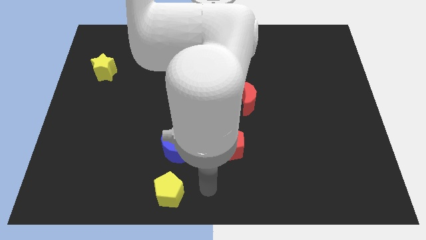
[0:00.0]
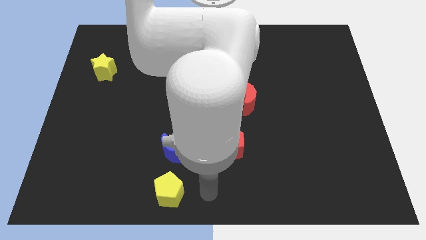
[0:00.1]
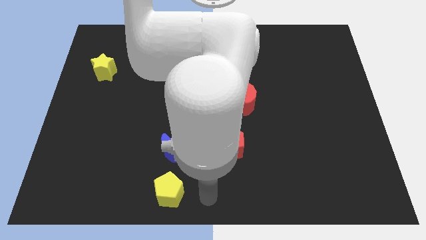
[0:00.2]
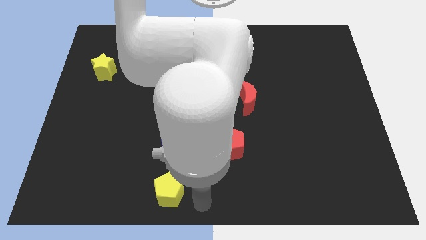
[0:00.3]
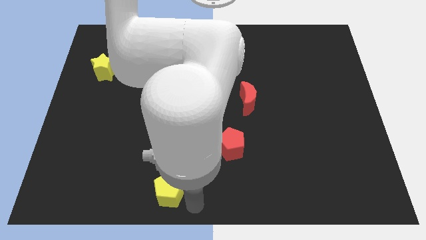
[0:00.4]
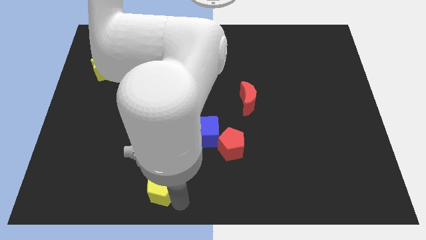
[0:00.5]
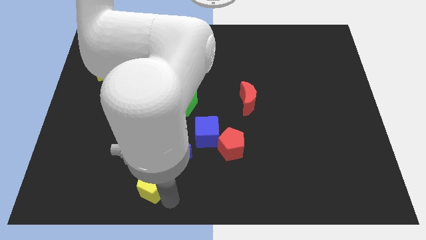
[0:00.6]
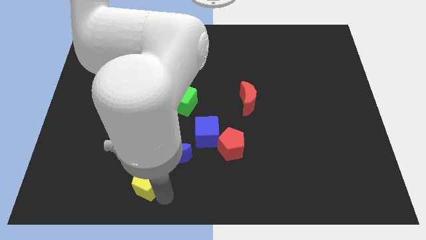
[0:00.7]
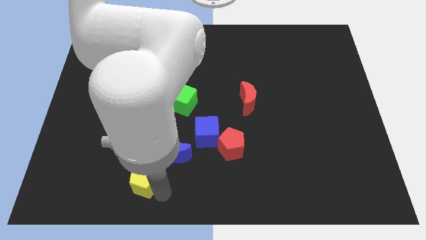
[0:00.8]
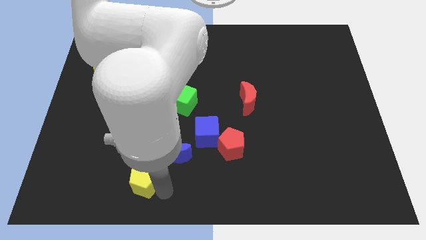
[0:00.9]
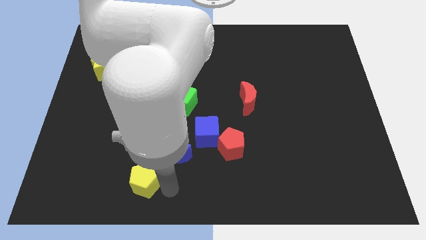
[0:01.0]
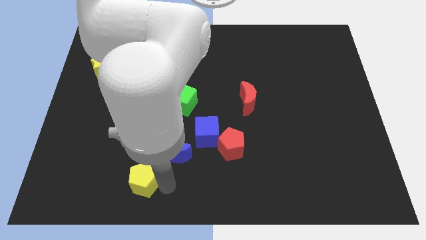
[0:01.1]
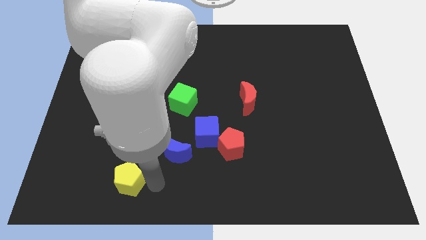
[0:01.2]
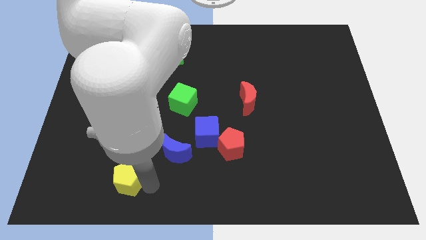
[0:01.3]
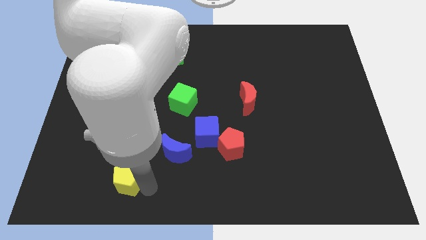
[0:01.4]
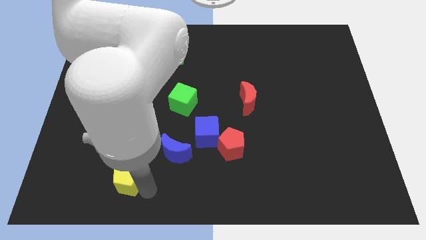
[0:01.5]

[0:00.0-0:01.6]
move the yellow pentagon diagonally to the bottom left of the blue moon

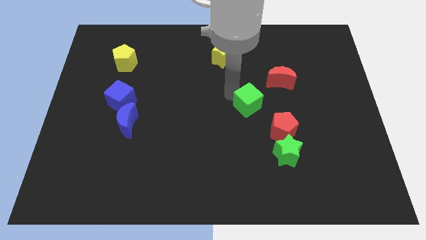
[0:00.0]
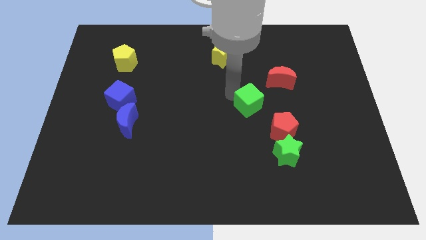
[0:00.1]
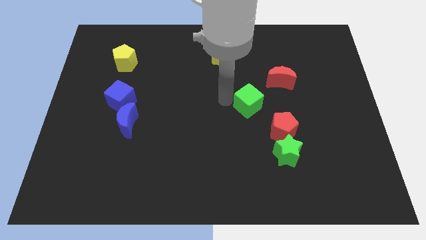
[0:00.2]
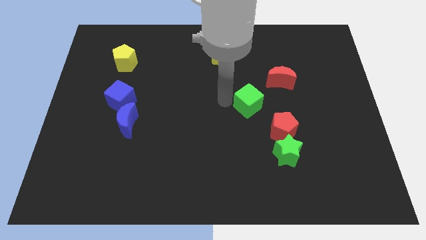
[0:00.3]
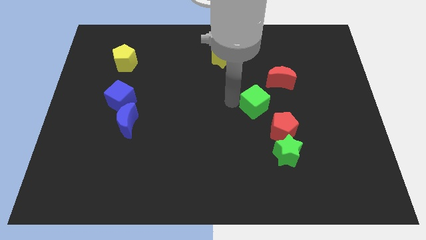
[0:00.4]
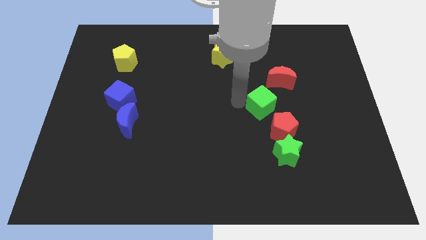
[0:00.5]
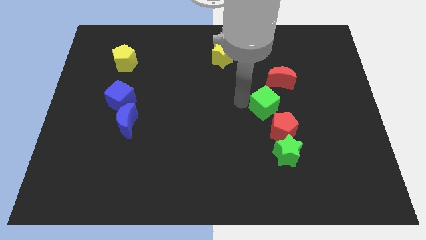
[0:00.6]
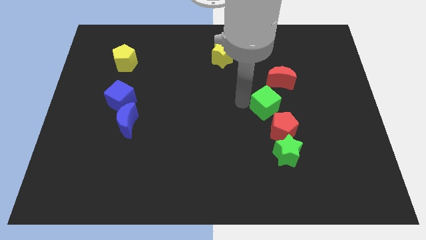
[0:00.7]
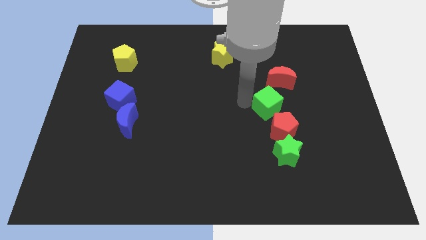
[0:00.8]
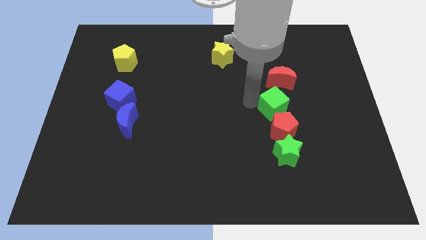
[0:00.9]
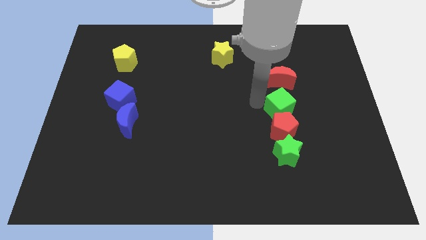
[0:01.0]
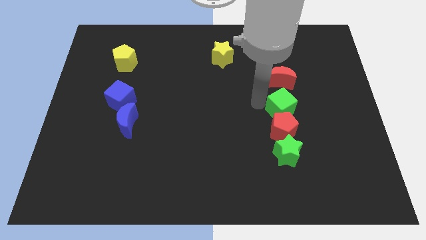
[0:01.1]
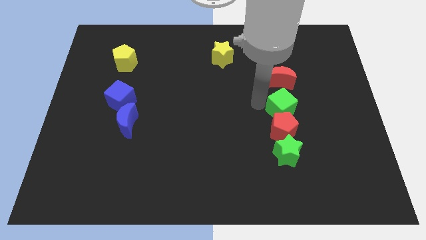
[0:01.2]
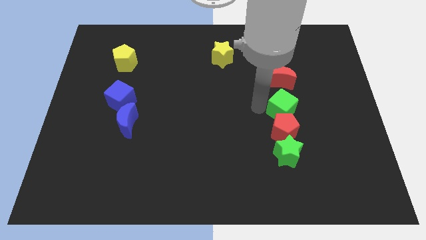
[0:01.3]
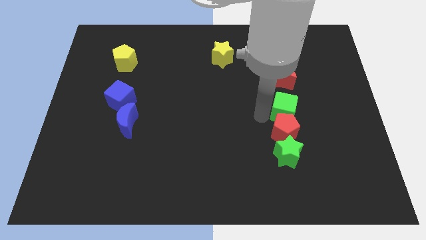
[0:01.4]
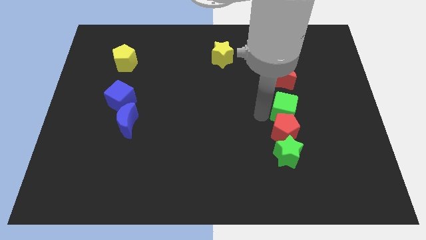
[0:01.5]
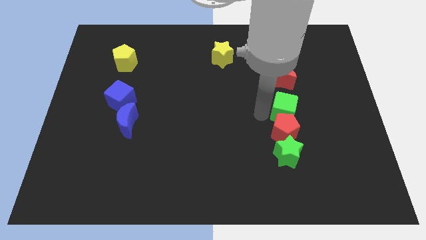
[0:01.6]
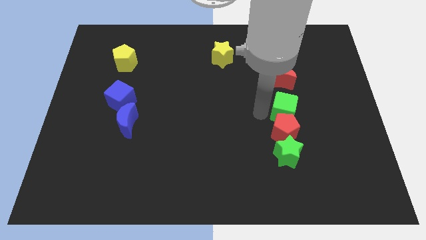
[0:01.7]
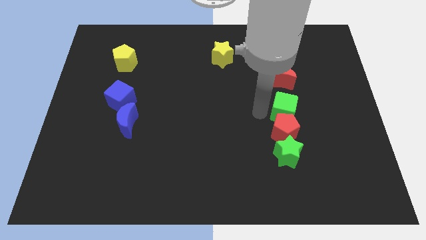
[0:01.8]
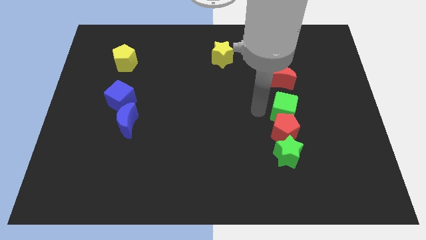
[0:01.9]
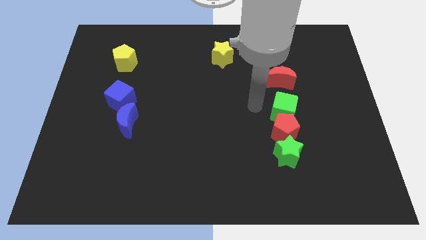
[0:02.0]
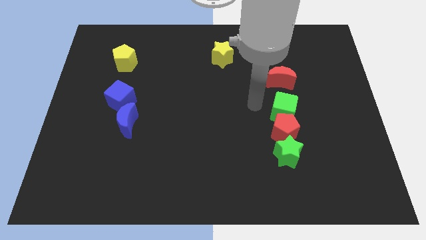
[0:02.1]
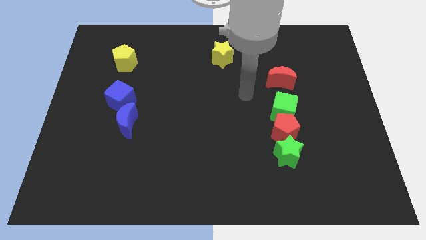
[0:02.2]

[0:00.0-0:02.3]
move the green cube to the top of the red pentagon

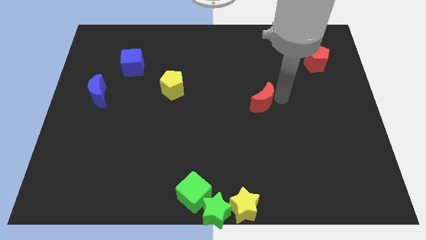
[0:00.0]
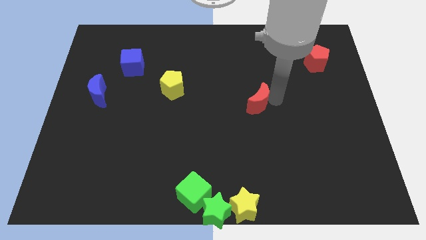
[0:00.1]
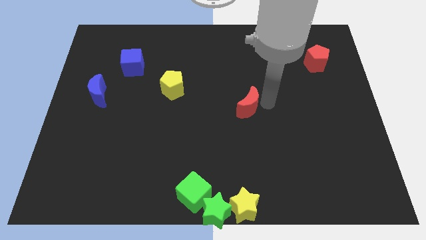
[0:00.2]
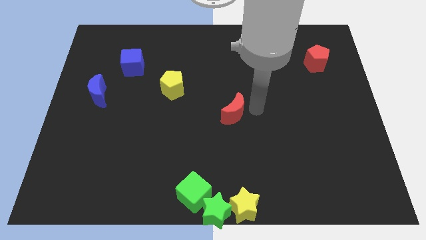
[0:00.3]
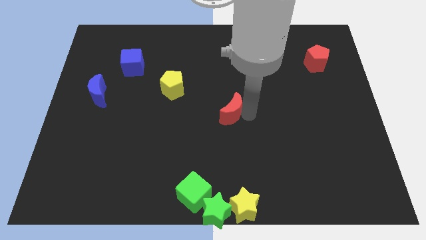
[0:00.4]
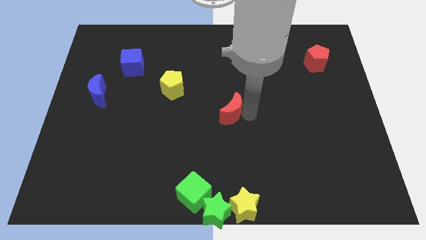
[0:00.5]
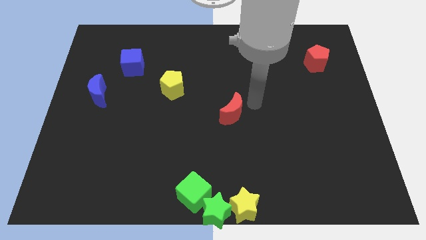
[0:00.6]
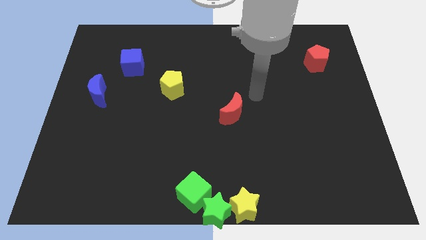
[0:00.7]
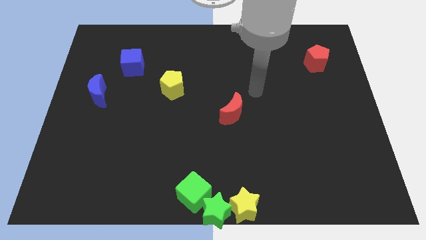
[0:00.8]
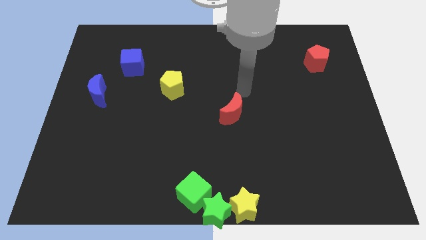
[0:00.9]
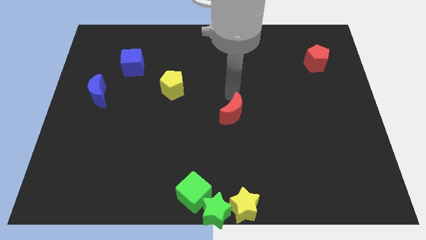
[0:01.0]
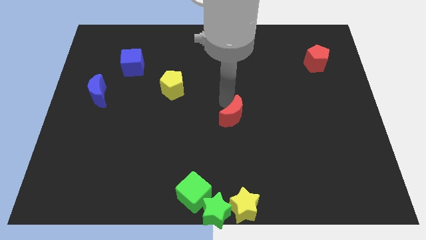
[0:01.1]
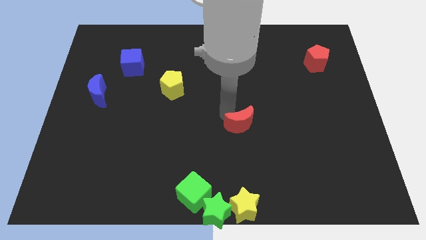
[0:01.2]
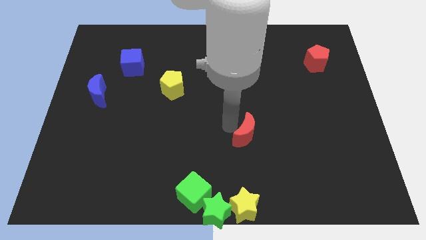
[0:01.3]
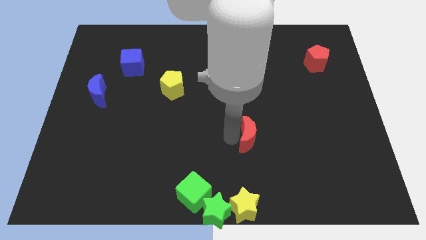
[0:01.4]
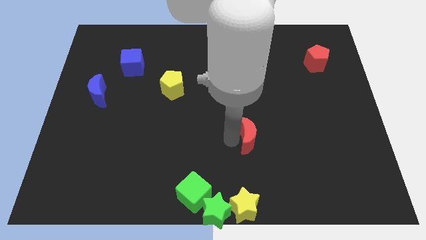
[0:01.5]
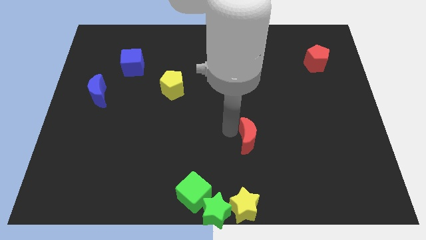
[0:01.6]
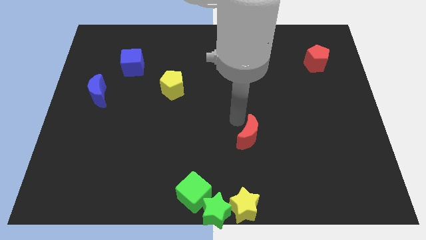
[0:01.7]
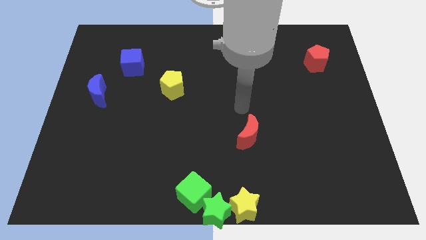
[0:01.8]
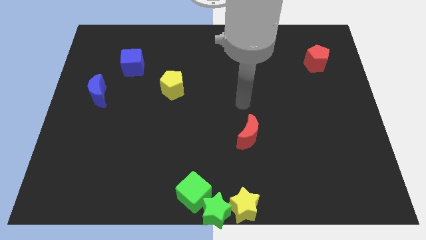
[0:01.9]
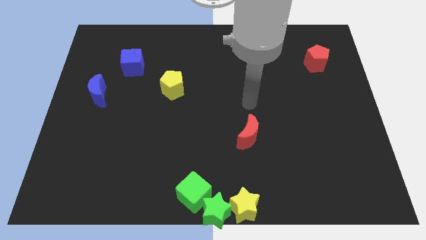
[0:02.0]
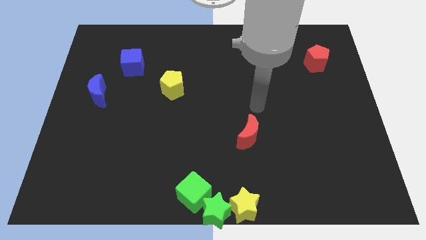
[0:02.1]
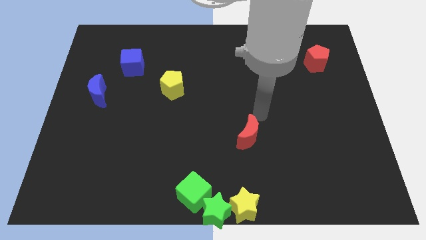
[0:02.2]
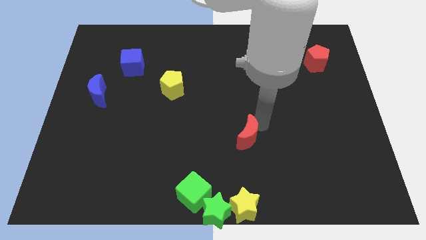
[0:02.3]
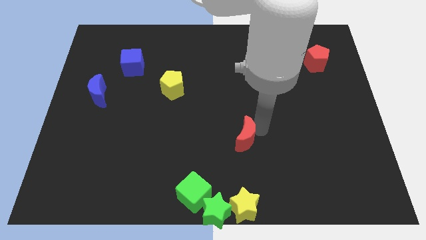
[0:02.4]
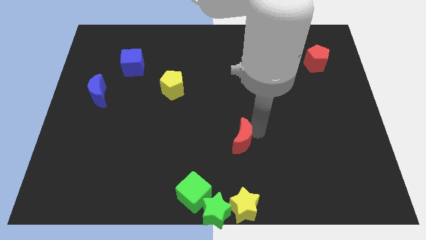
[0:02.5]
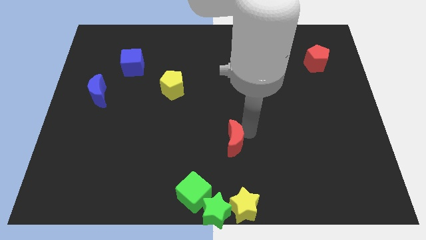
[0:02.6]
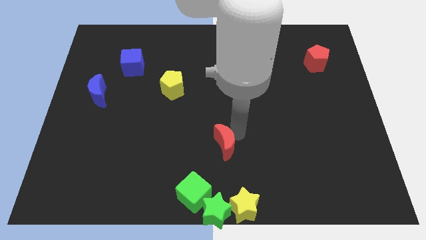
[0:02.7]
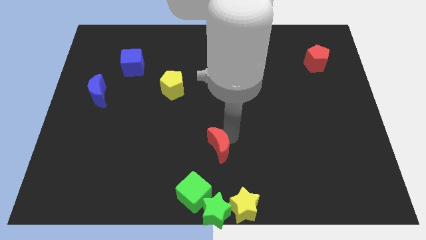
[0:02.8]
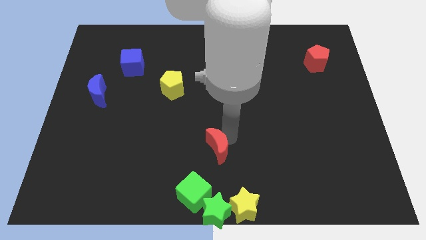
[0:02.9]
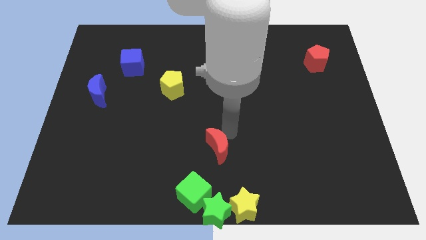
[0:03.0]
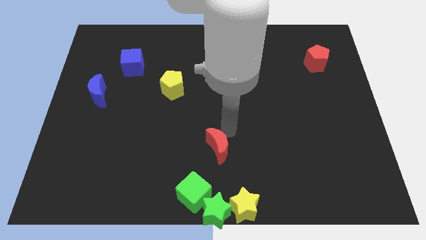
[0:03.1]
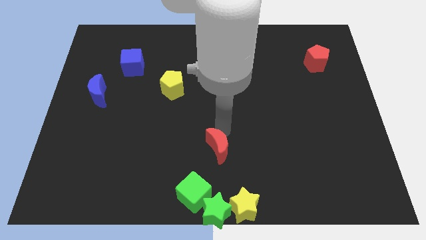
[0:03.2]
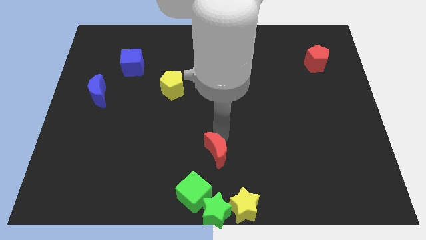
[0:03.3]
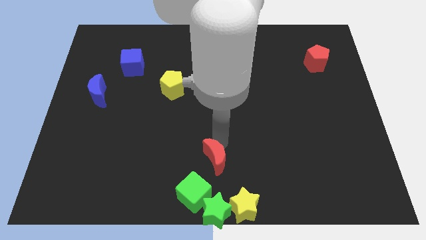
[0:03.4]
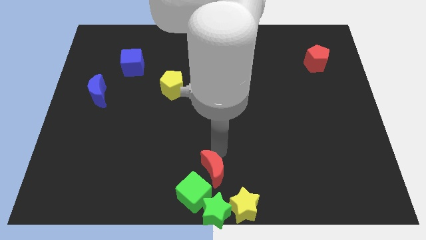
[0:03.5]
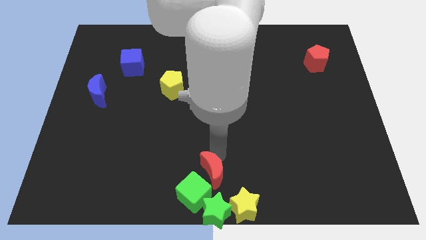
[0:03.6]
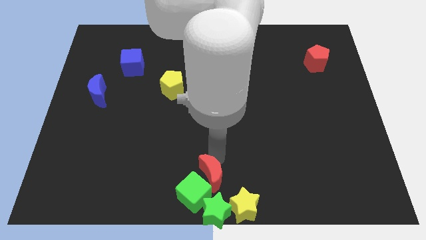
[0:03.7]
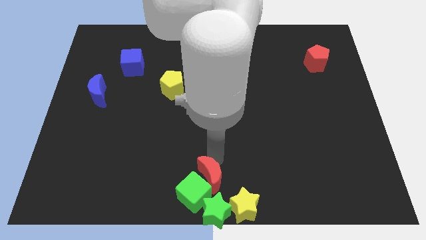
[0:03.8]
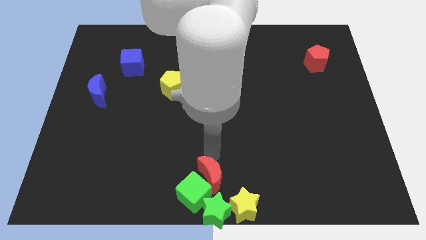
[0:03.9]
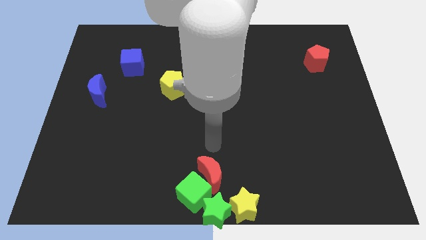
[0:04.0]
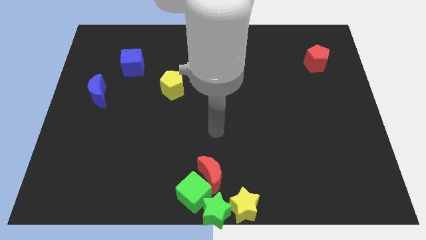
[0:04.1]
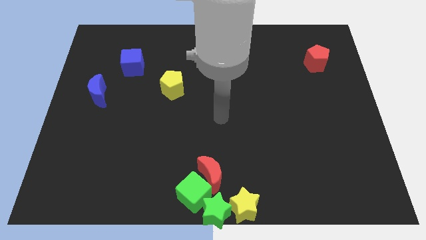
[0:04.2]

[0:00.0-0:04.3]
push the red crescent to the top right of the green cube

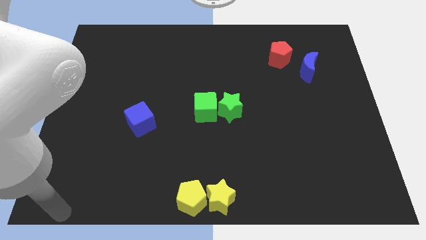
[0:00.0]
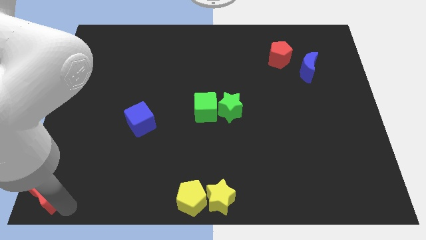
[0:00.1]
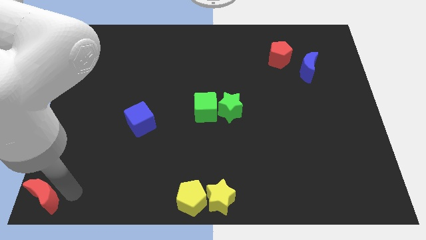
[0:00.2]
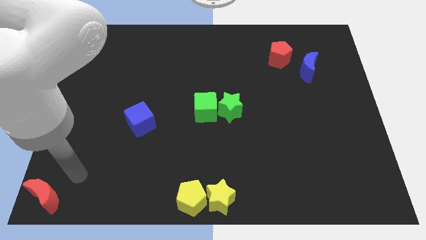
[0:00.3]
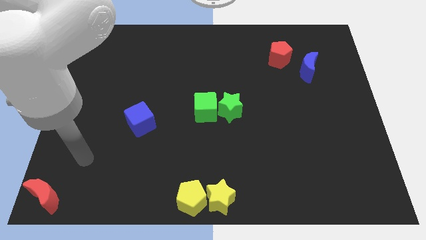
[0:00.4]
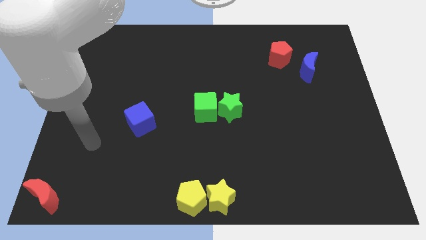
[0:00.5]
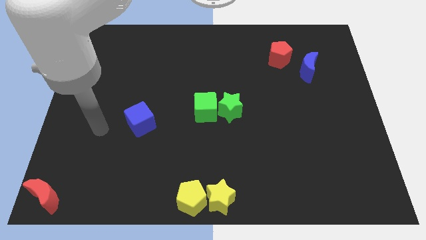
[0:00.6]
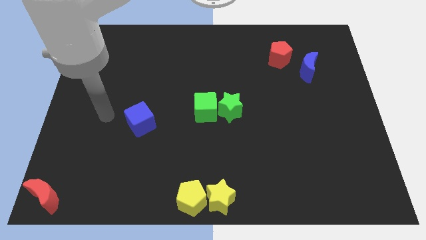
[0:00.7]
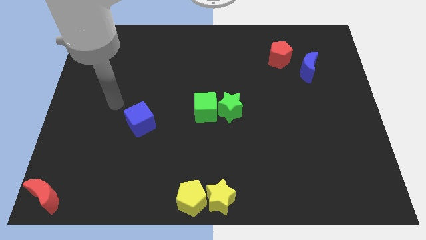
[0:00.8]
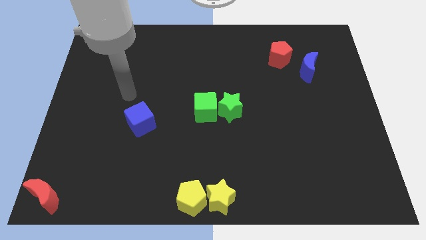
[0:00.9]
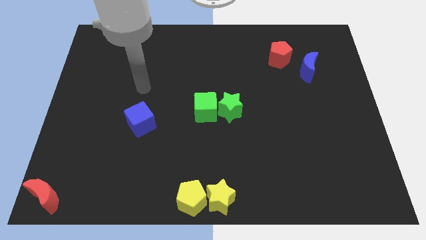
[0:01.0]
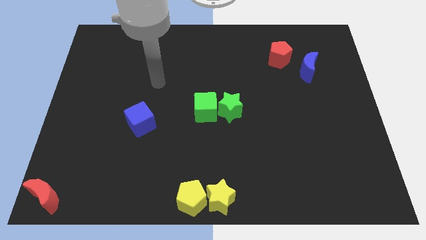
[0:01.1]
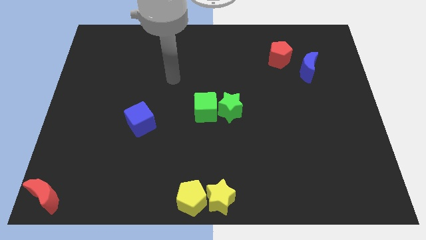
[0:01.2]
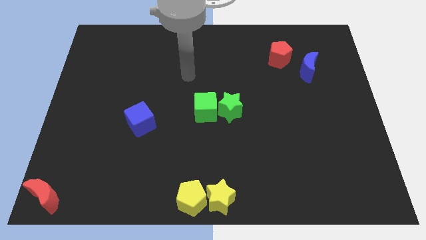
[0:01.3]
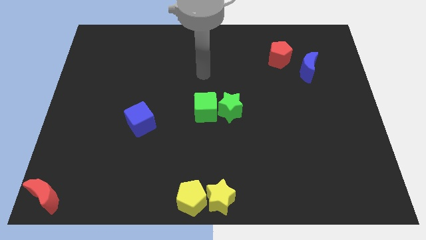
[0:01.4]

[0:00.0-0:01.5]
move your arm away from the red moon
